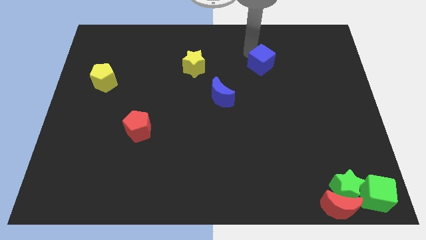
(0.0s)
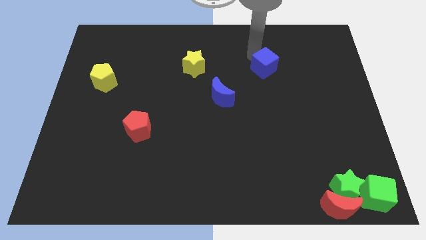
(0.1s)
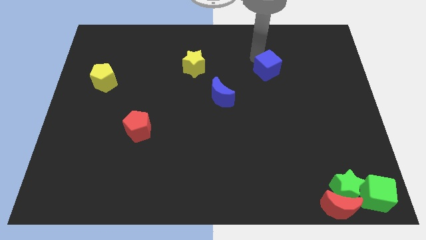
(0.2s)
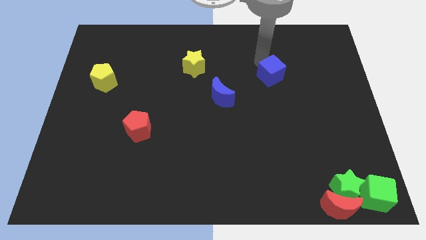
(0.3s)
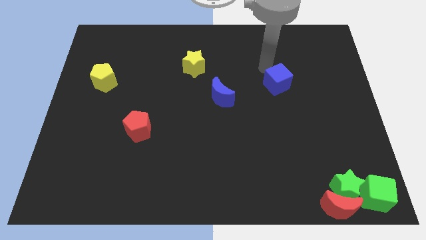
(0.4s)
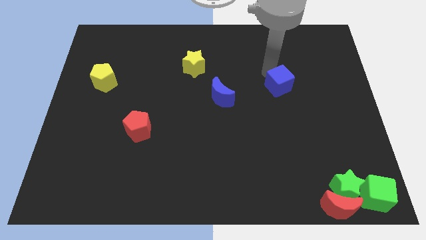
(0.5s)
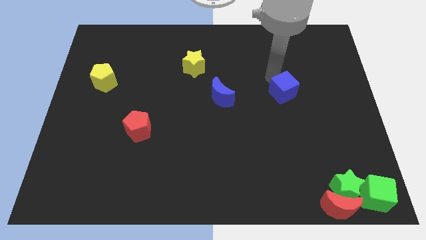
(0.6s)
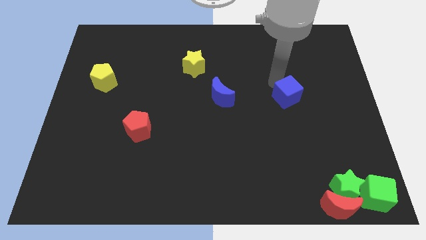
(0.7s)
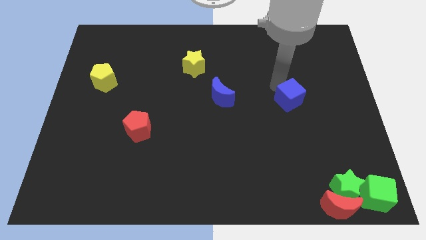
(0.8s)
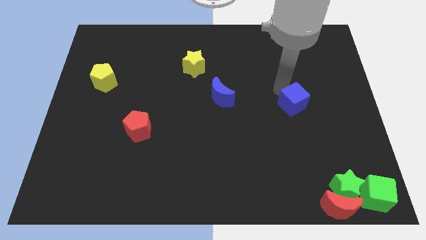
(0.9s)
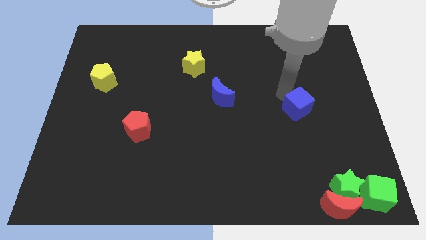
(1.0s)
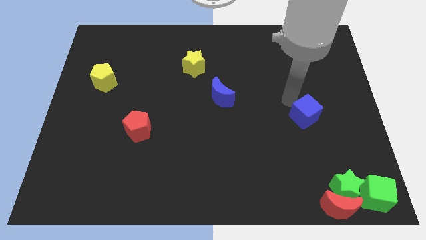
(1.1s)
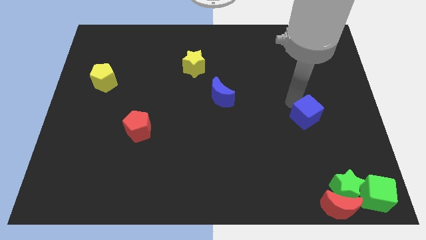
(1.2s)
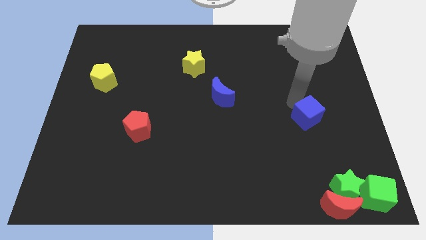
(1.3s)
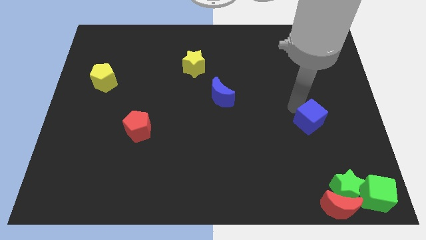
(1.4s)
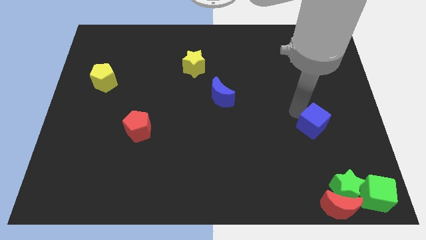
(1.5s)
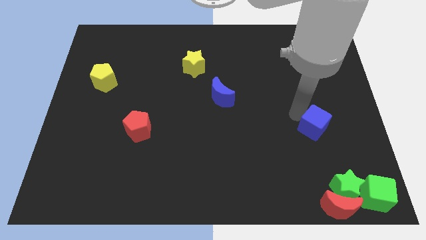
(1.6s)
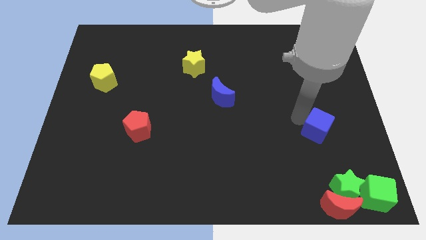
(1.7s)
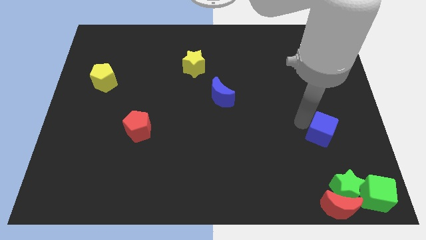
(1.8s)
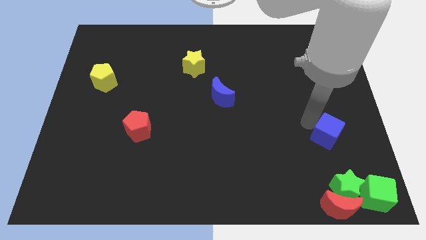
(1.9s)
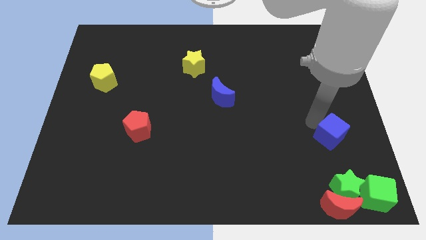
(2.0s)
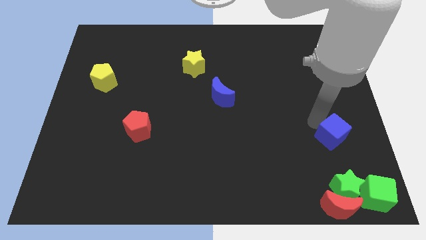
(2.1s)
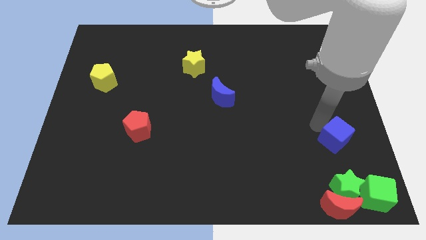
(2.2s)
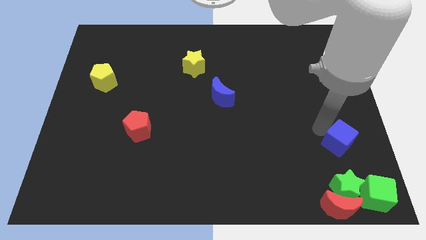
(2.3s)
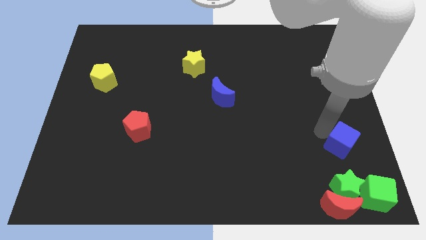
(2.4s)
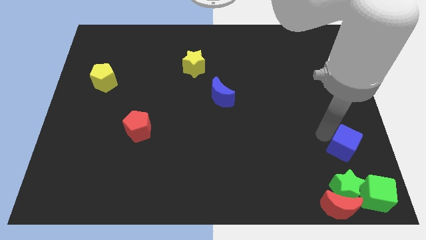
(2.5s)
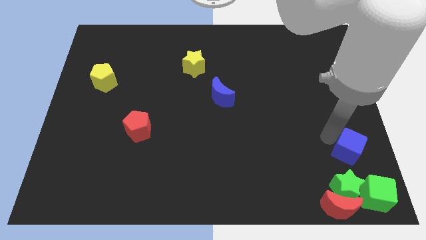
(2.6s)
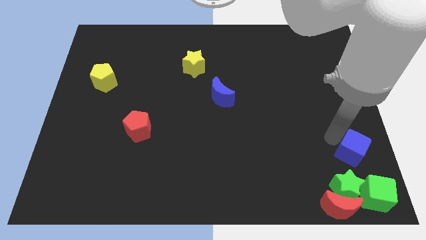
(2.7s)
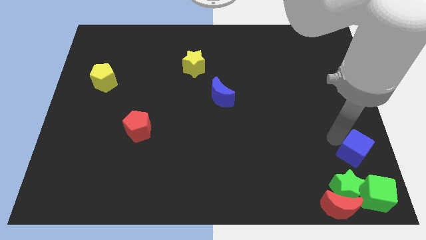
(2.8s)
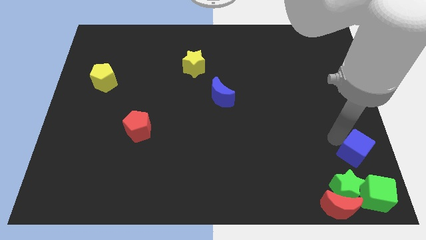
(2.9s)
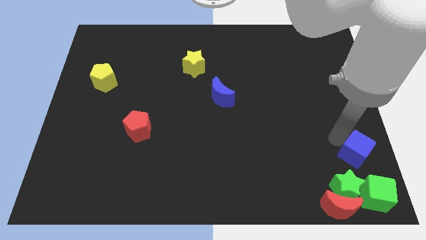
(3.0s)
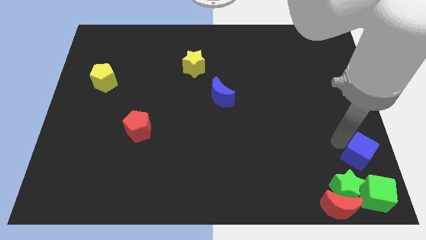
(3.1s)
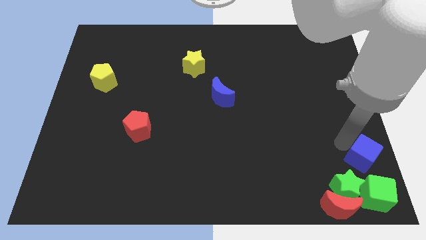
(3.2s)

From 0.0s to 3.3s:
drag the blue cube above the green

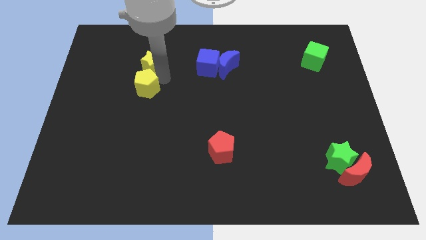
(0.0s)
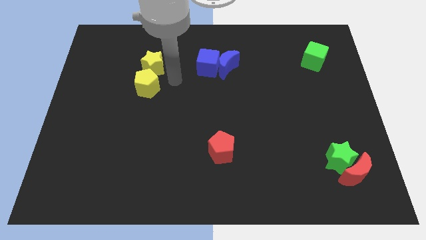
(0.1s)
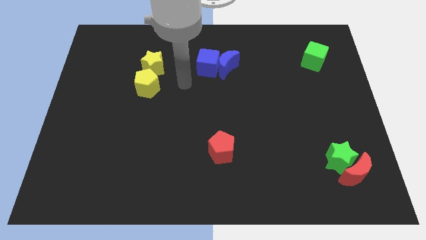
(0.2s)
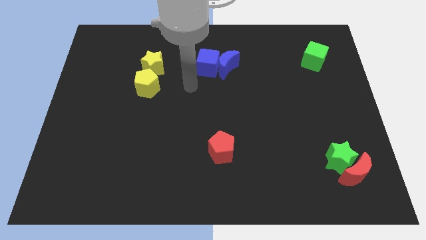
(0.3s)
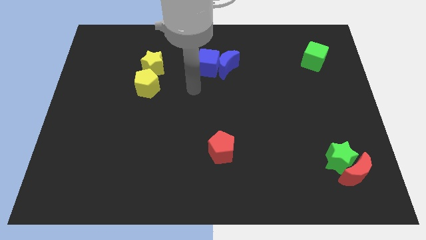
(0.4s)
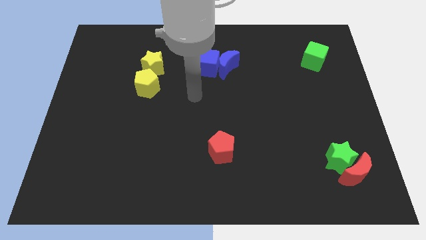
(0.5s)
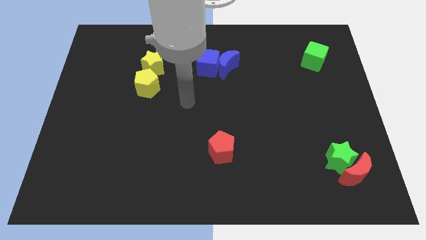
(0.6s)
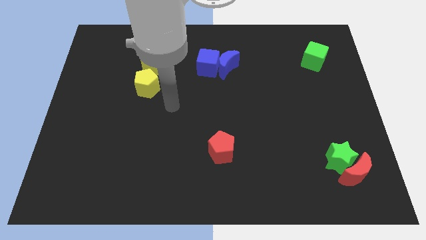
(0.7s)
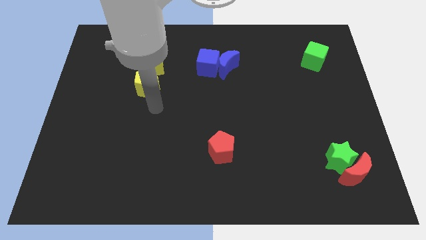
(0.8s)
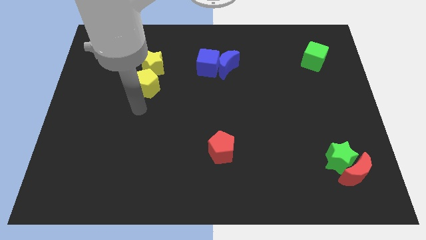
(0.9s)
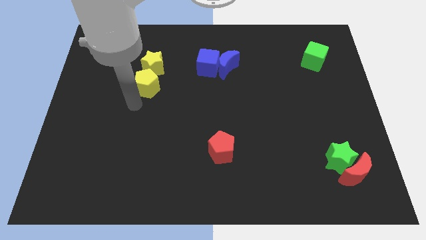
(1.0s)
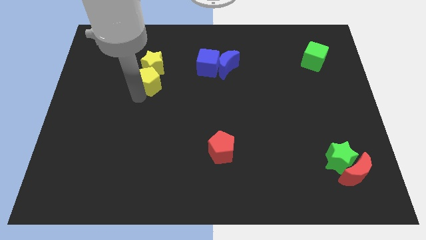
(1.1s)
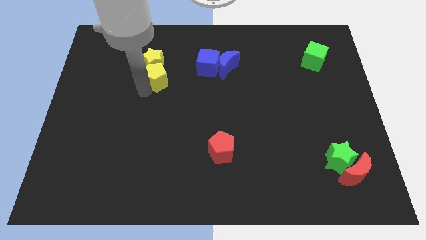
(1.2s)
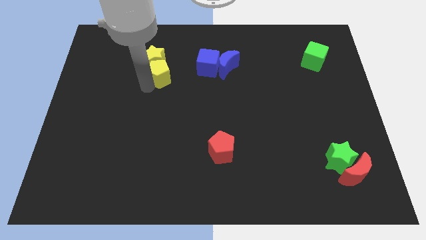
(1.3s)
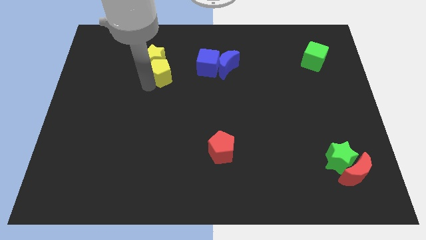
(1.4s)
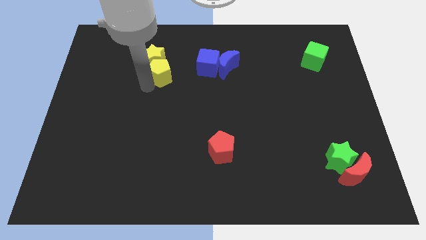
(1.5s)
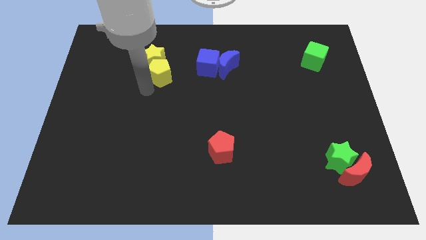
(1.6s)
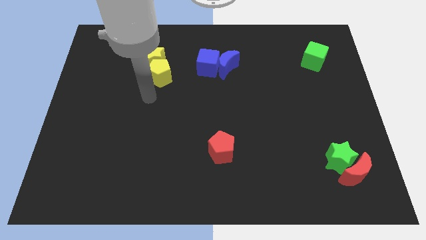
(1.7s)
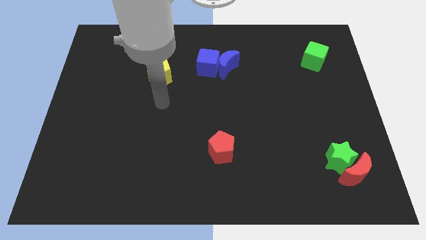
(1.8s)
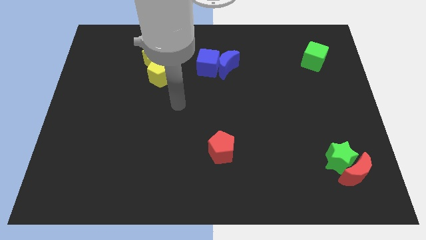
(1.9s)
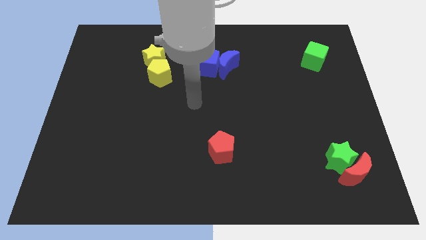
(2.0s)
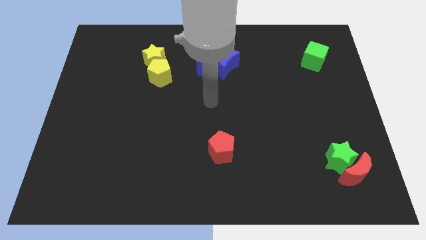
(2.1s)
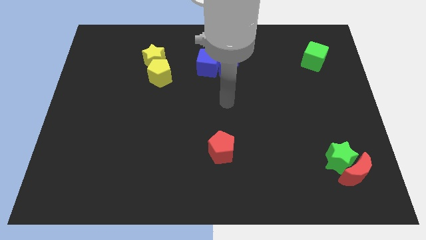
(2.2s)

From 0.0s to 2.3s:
push the yellow blocks slightly up

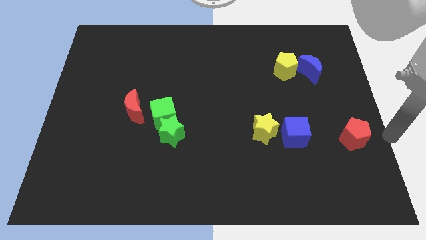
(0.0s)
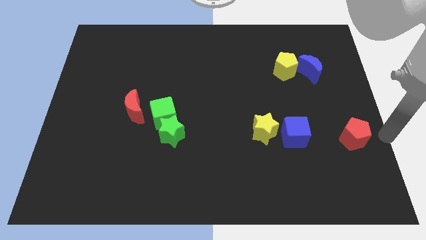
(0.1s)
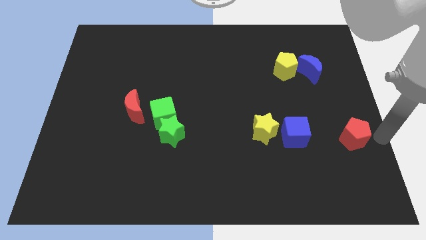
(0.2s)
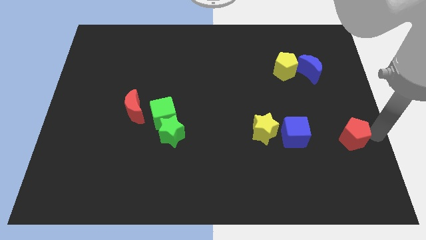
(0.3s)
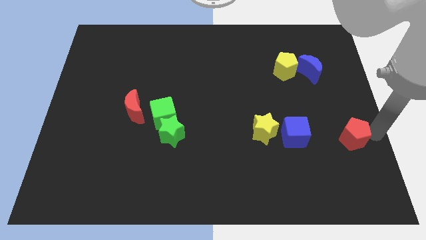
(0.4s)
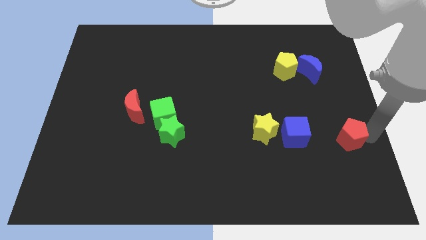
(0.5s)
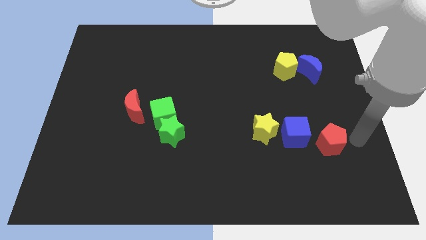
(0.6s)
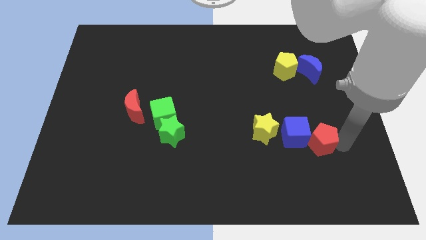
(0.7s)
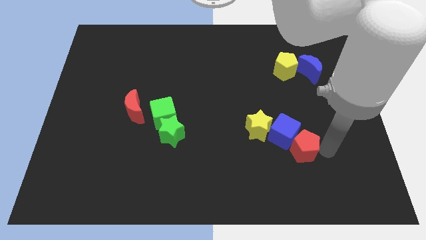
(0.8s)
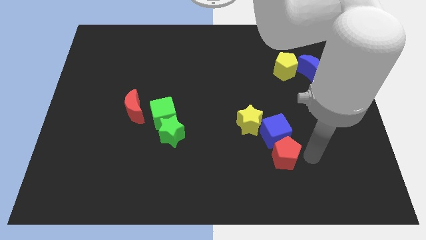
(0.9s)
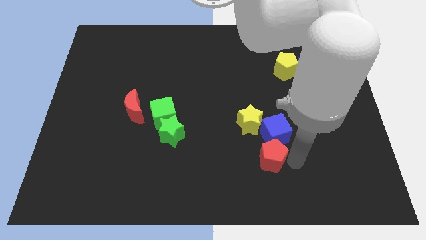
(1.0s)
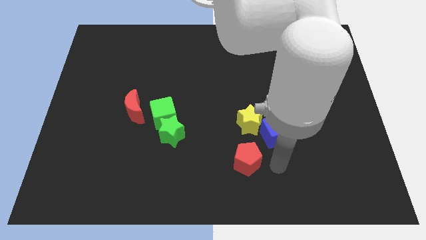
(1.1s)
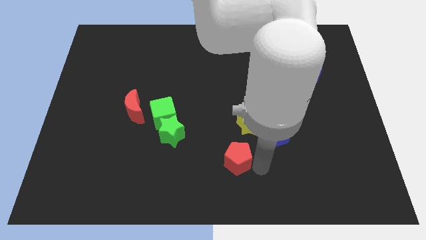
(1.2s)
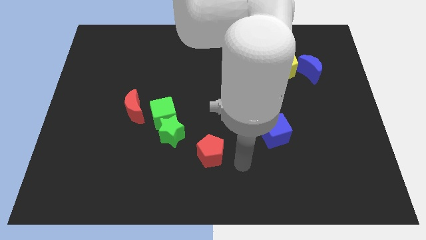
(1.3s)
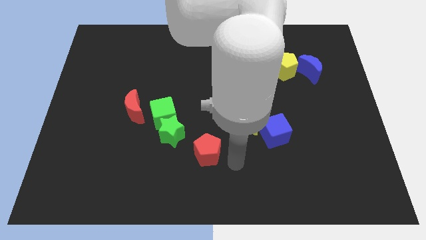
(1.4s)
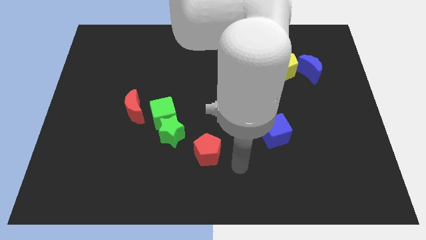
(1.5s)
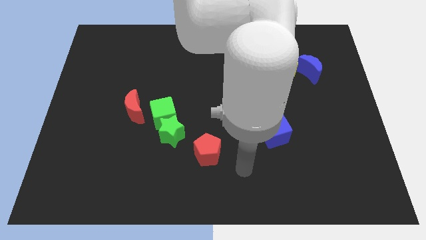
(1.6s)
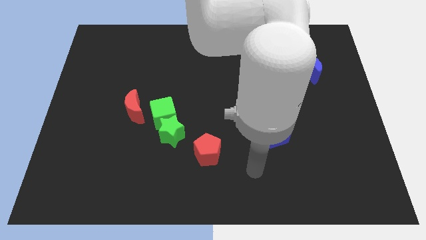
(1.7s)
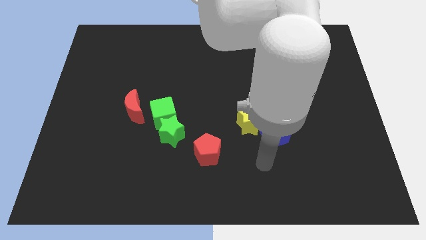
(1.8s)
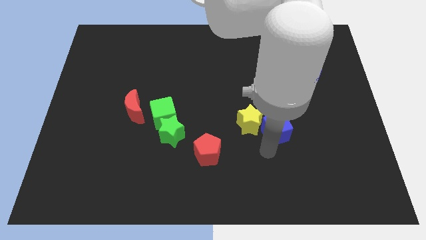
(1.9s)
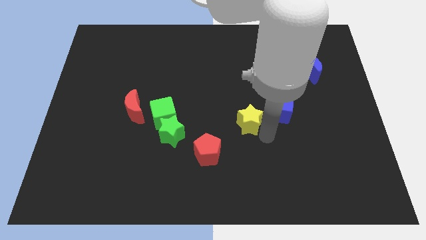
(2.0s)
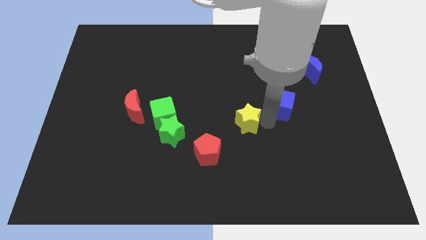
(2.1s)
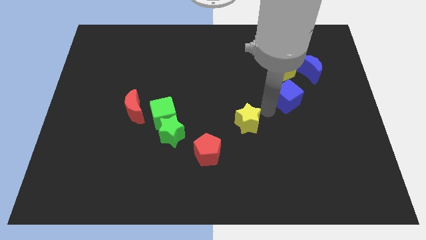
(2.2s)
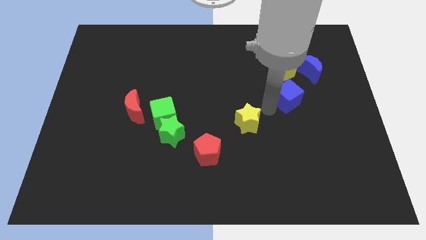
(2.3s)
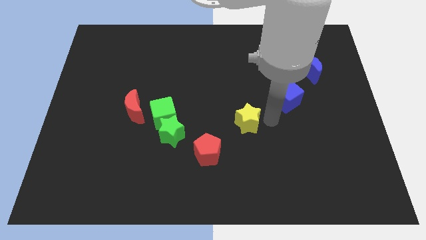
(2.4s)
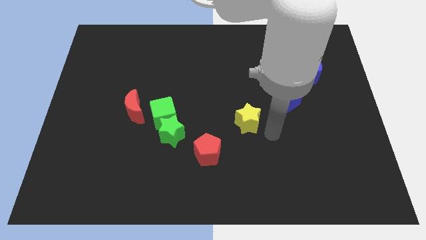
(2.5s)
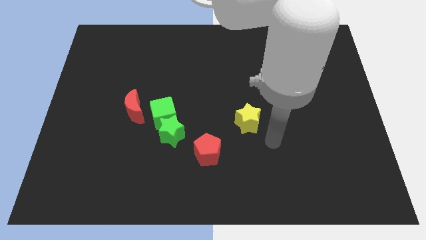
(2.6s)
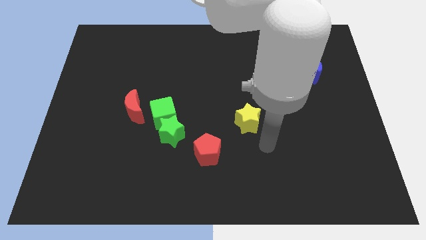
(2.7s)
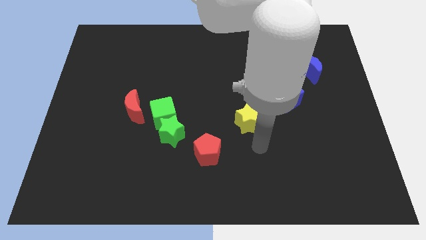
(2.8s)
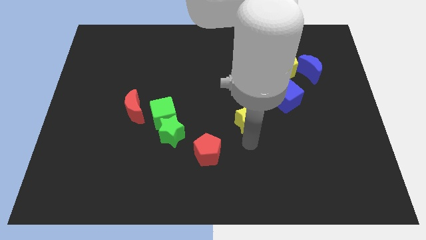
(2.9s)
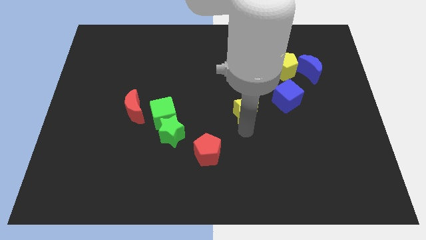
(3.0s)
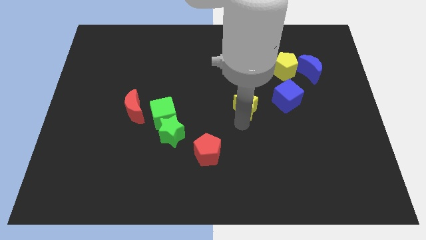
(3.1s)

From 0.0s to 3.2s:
push the red pentagon to the center of the board blue cube yellow star slightly towards upward

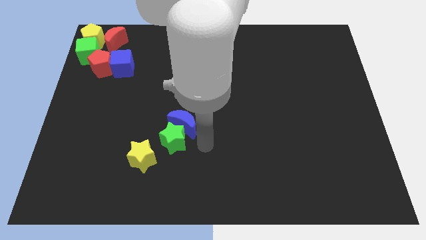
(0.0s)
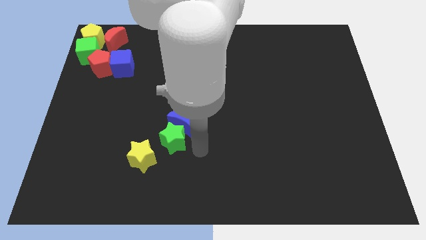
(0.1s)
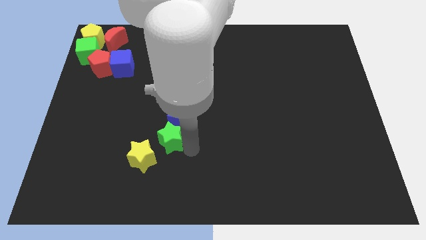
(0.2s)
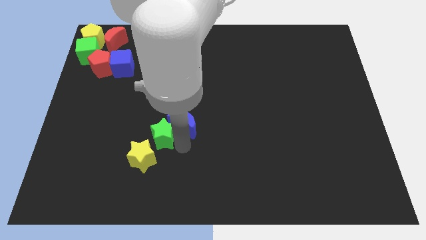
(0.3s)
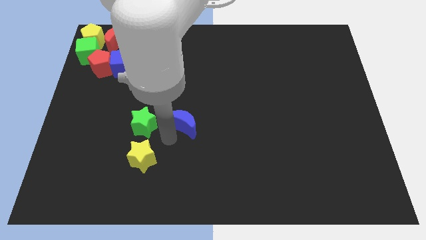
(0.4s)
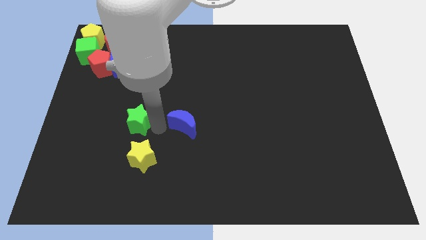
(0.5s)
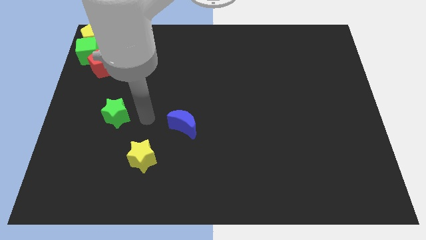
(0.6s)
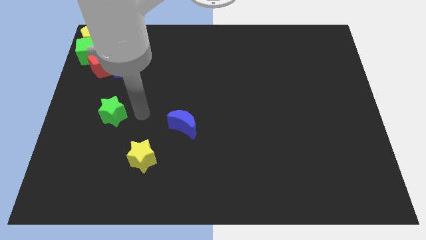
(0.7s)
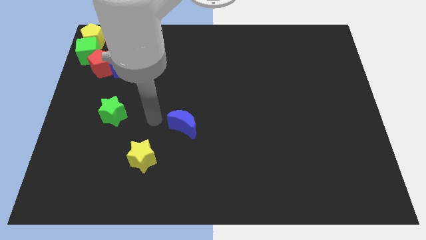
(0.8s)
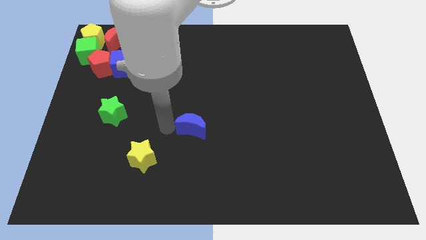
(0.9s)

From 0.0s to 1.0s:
push the green star diagonal to the yellow star
